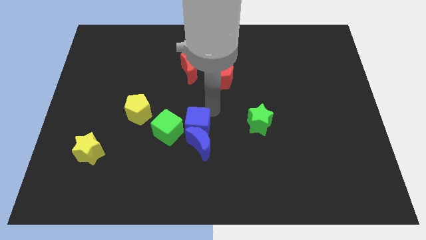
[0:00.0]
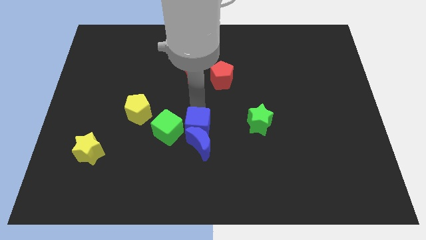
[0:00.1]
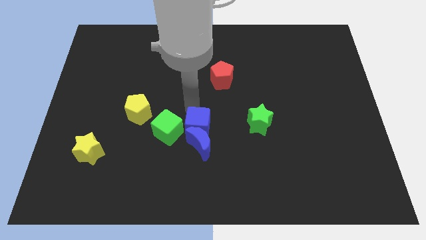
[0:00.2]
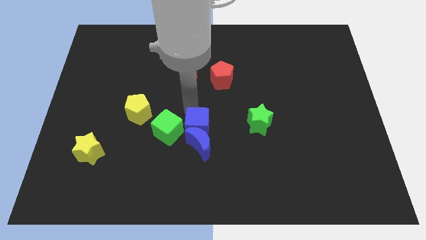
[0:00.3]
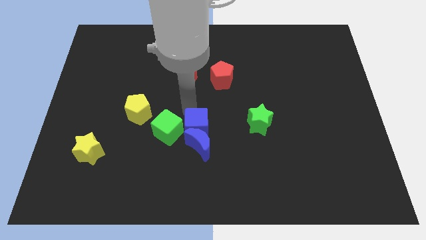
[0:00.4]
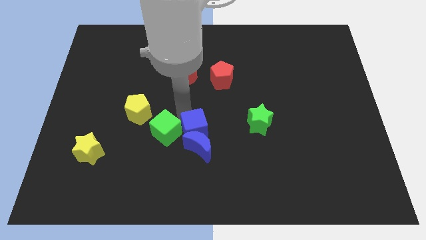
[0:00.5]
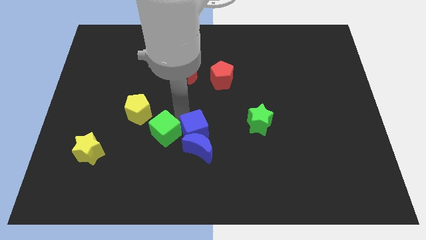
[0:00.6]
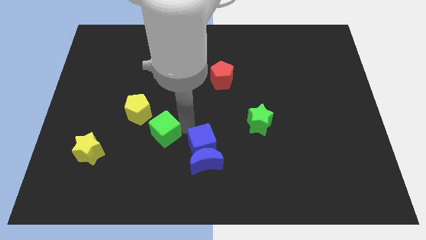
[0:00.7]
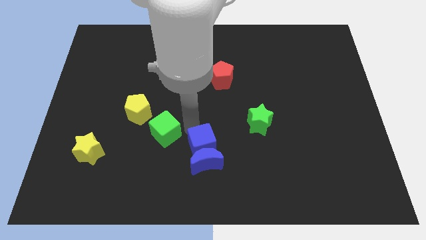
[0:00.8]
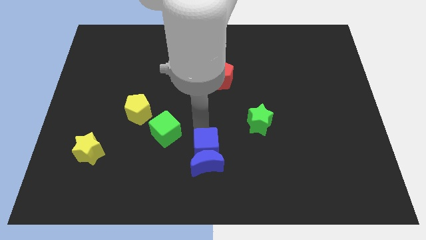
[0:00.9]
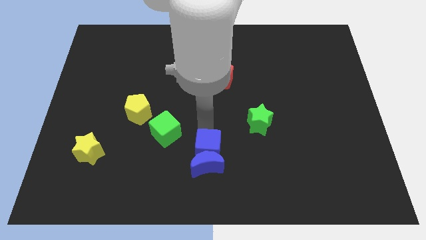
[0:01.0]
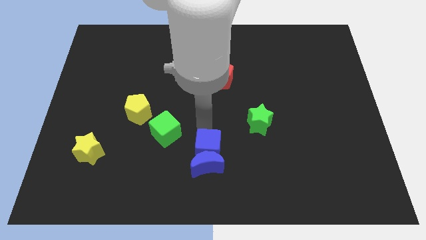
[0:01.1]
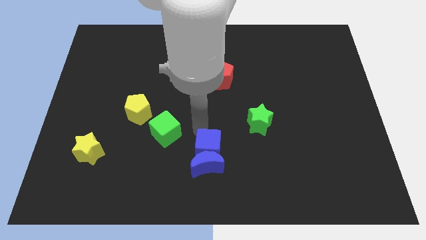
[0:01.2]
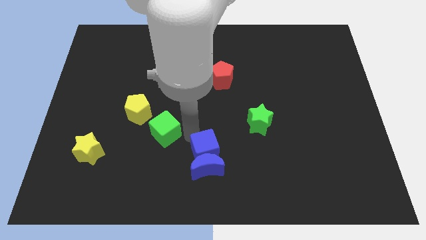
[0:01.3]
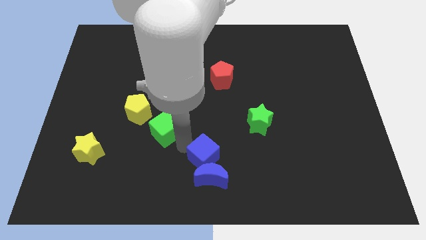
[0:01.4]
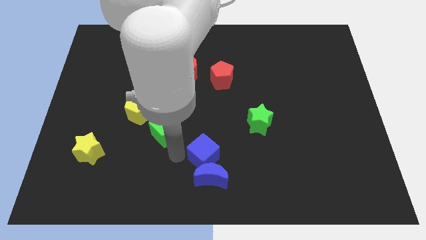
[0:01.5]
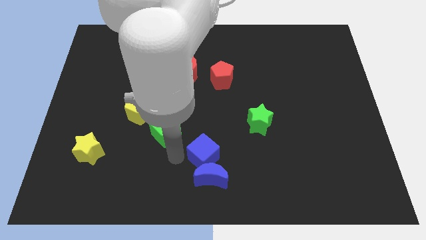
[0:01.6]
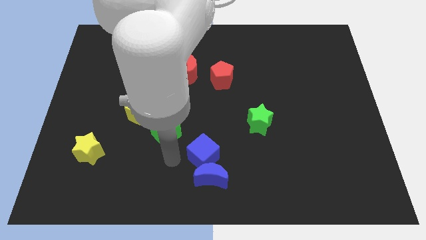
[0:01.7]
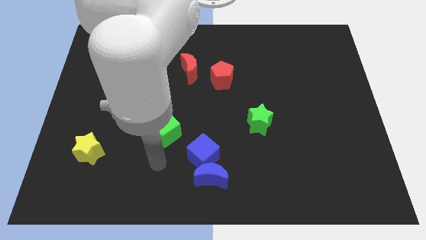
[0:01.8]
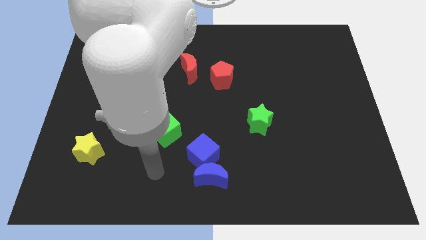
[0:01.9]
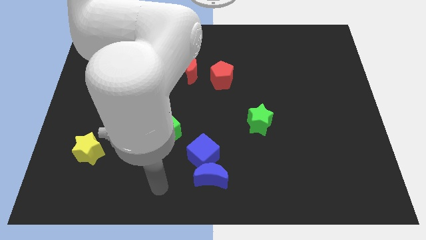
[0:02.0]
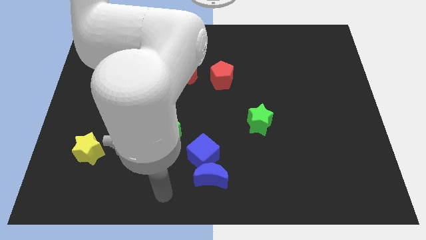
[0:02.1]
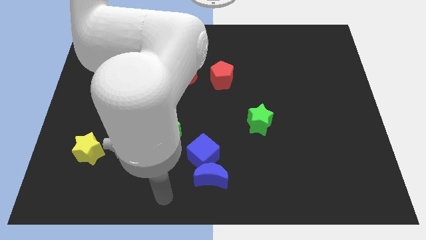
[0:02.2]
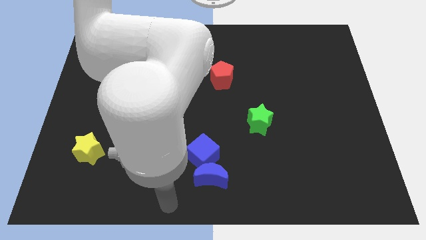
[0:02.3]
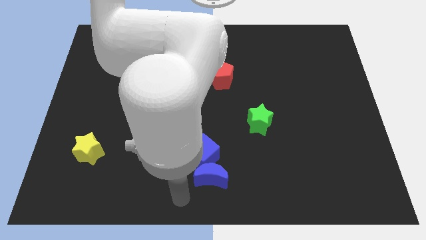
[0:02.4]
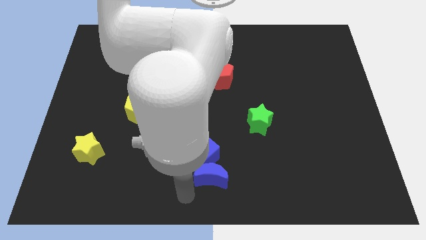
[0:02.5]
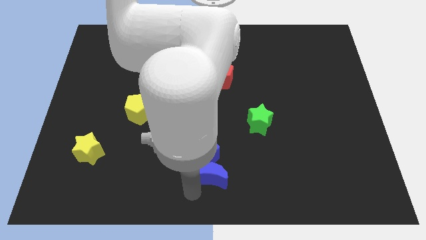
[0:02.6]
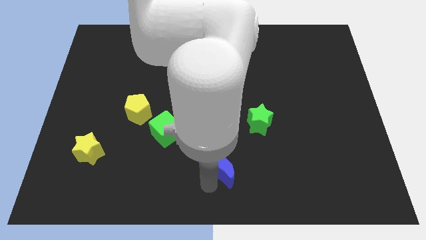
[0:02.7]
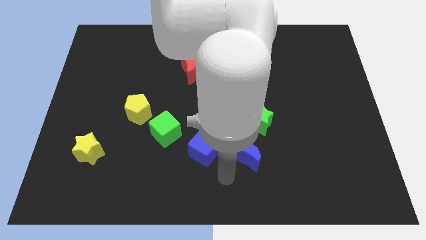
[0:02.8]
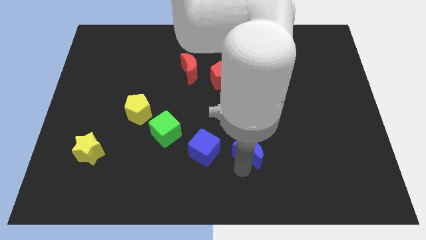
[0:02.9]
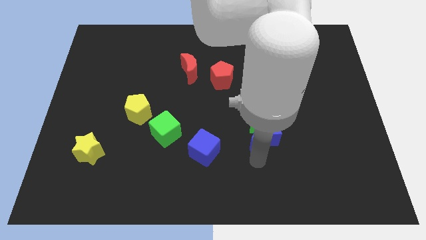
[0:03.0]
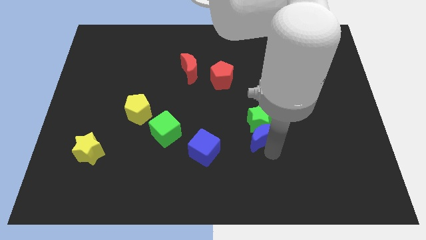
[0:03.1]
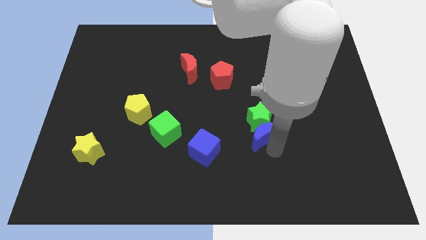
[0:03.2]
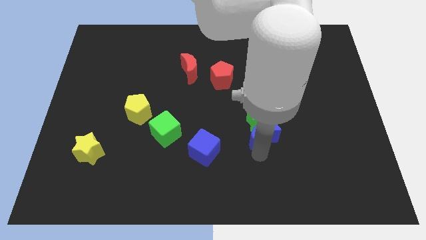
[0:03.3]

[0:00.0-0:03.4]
place blue moon below green star

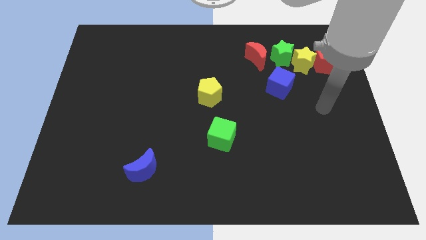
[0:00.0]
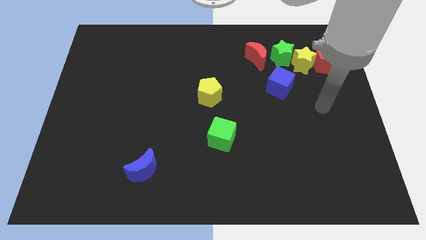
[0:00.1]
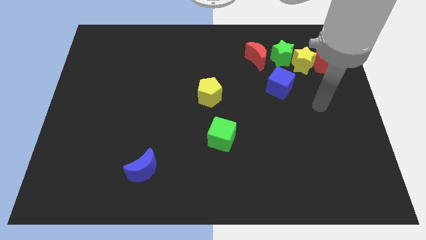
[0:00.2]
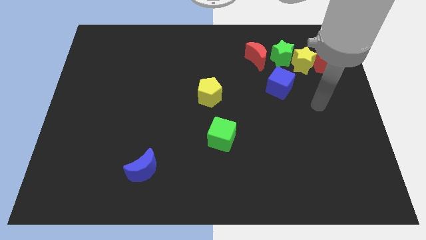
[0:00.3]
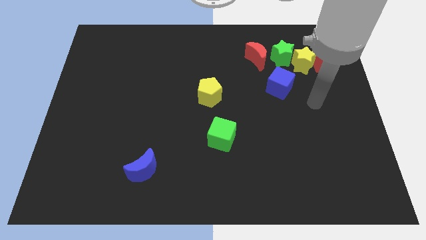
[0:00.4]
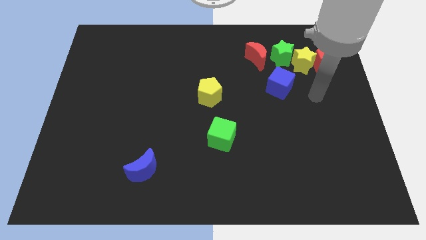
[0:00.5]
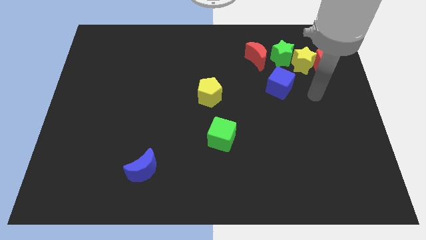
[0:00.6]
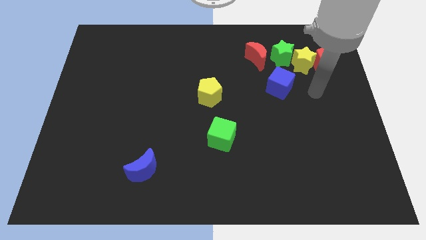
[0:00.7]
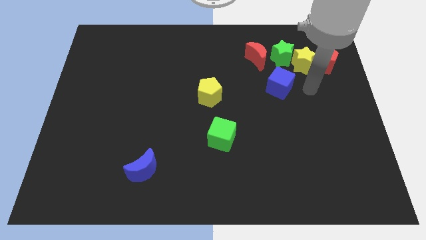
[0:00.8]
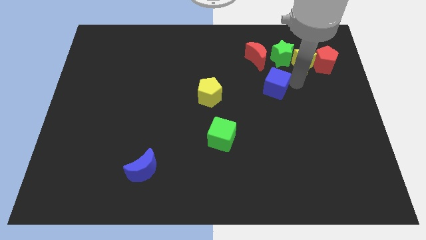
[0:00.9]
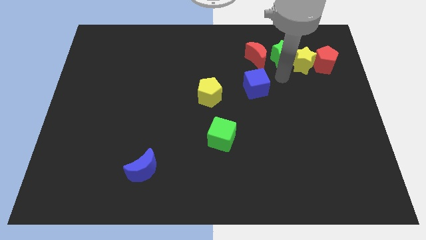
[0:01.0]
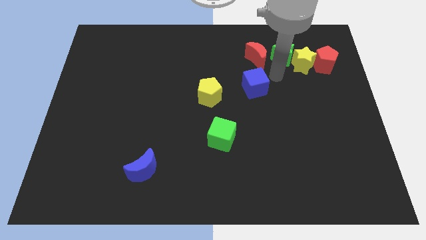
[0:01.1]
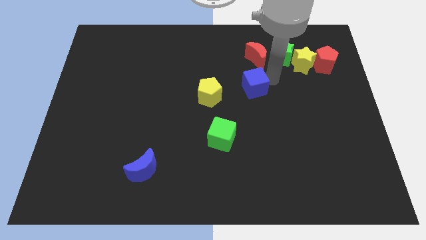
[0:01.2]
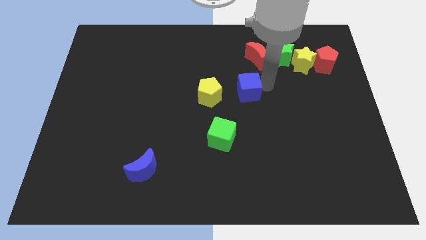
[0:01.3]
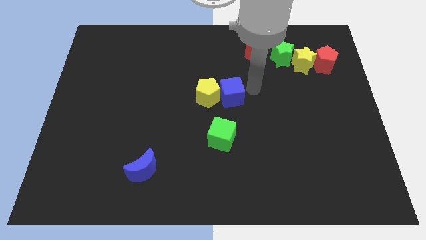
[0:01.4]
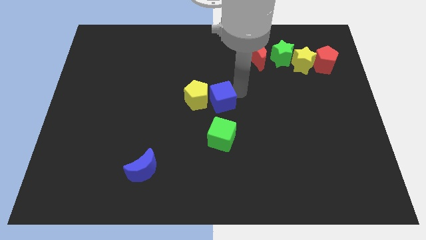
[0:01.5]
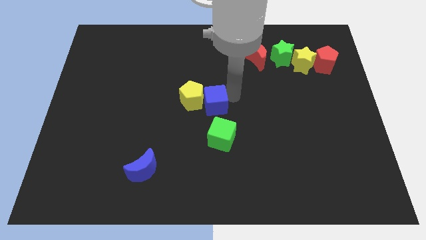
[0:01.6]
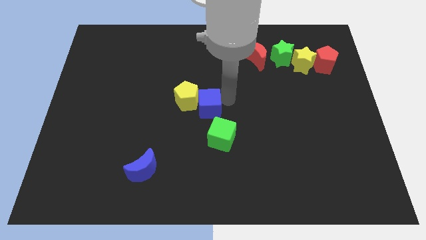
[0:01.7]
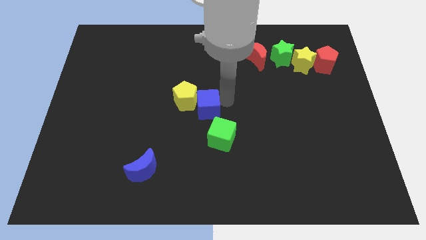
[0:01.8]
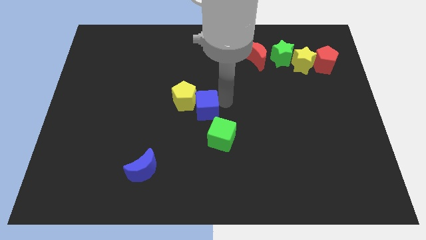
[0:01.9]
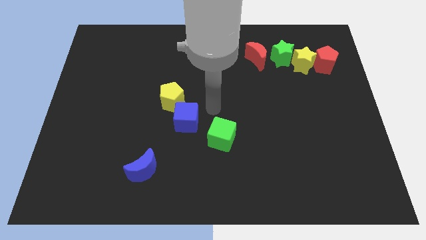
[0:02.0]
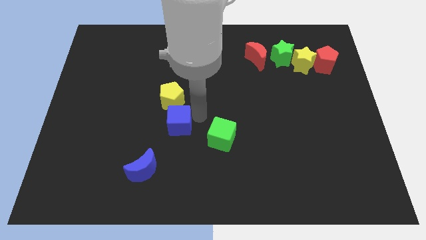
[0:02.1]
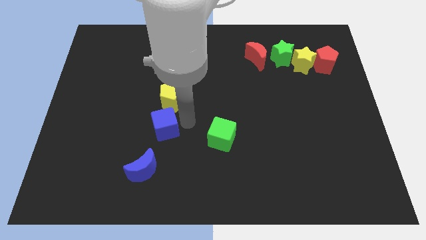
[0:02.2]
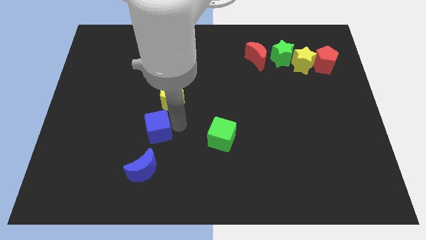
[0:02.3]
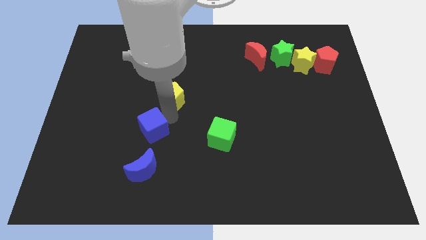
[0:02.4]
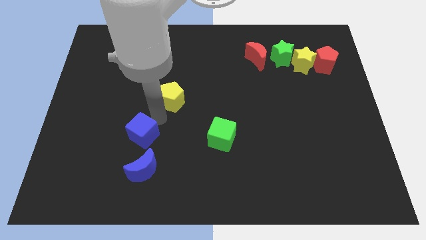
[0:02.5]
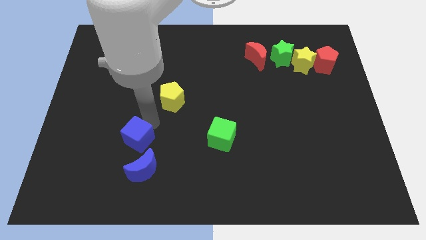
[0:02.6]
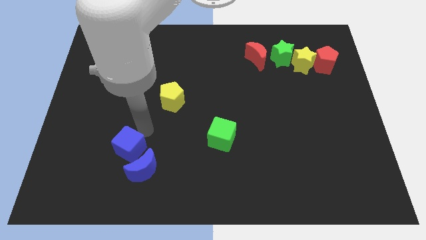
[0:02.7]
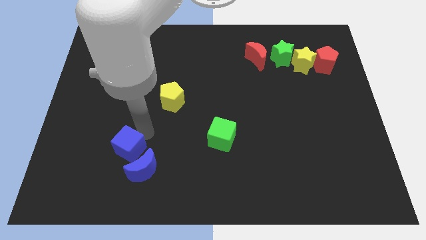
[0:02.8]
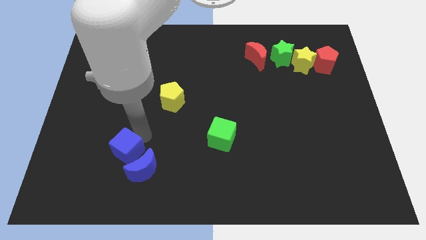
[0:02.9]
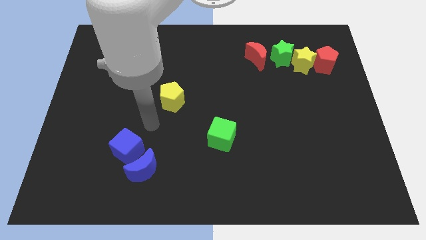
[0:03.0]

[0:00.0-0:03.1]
place the blue cube to the top of the blue crescent

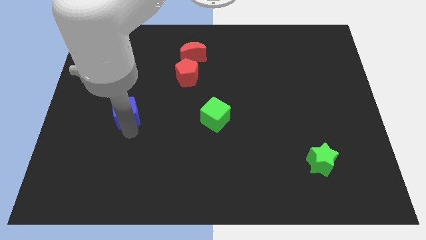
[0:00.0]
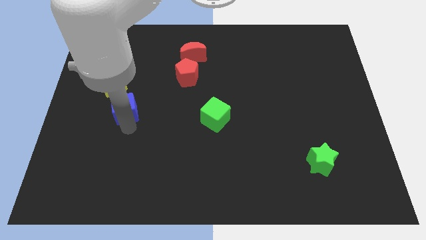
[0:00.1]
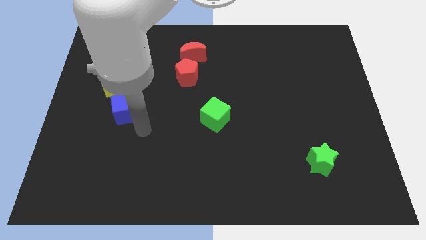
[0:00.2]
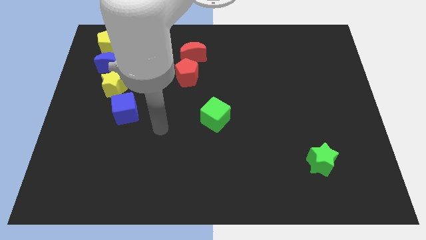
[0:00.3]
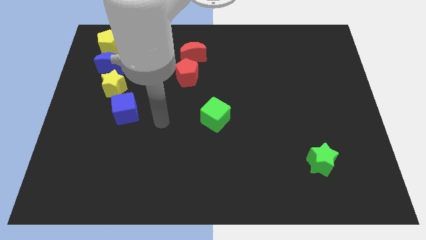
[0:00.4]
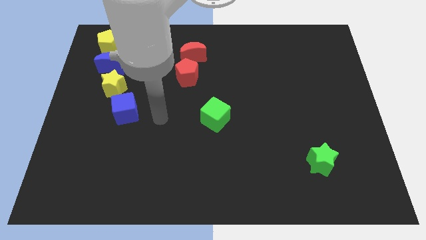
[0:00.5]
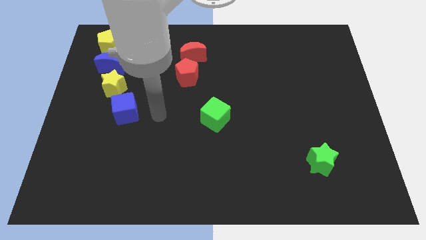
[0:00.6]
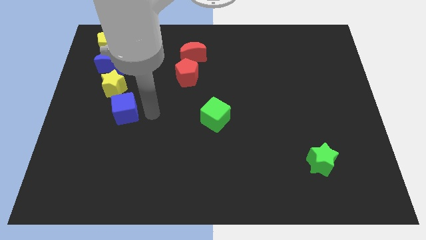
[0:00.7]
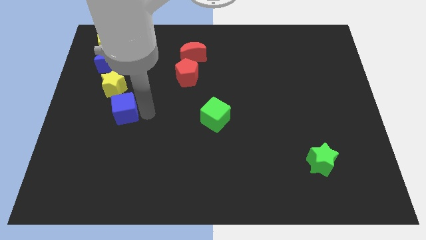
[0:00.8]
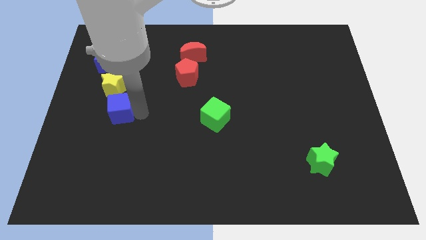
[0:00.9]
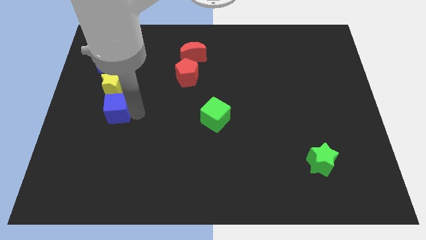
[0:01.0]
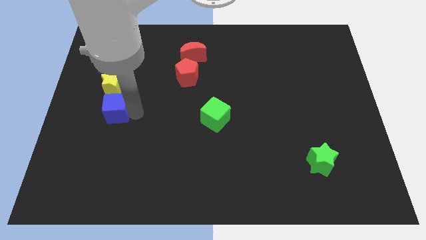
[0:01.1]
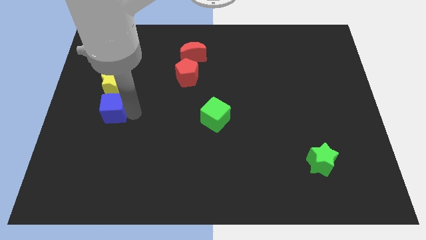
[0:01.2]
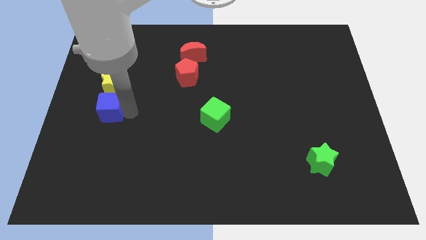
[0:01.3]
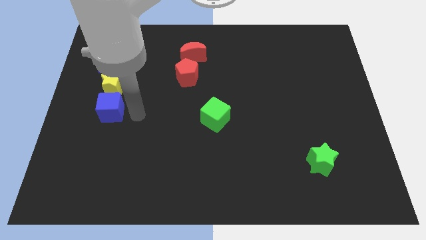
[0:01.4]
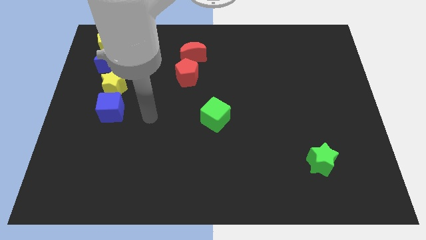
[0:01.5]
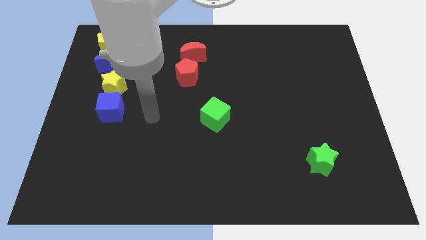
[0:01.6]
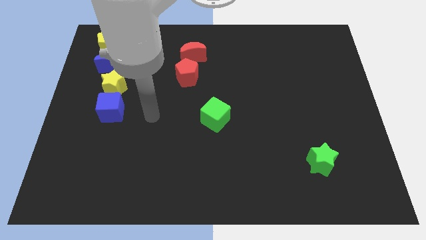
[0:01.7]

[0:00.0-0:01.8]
place the blue cube to the bottom side of the yellow star

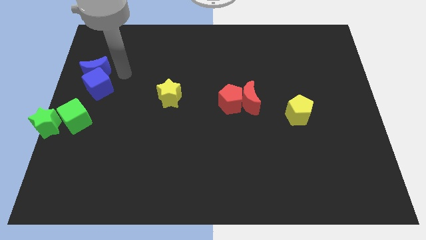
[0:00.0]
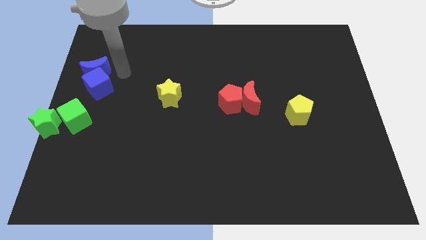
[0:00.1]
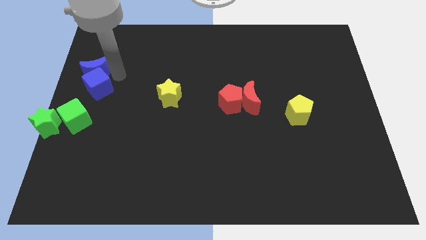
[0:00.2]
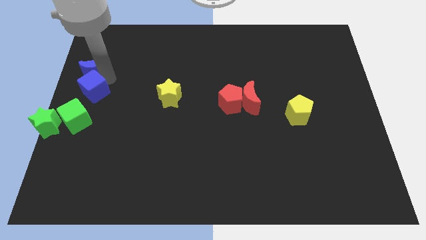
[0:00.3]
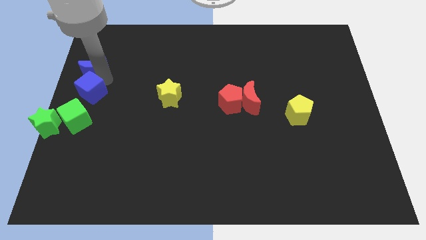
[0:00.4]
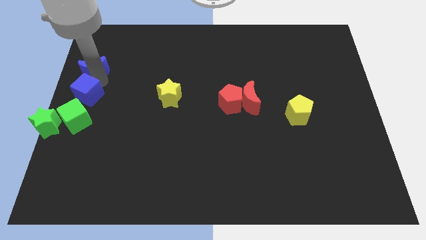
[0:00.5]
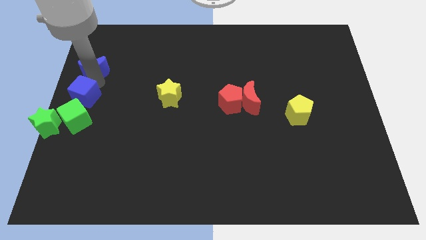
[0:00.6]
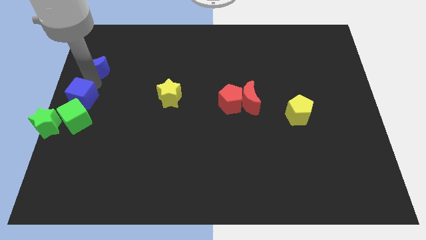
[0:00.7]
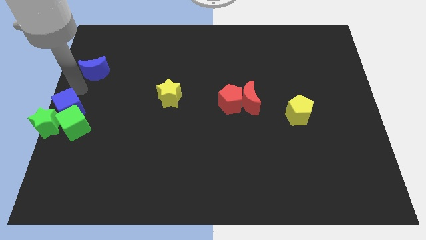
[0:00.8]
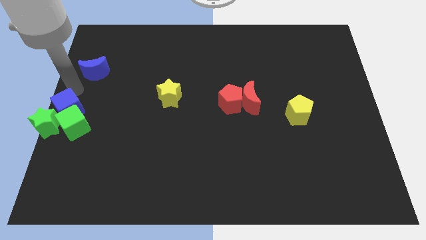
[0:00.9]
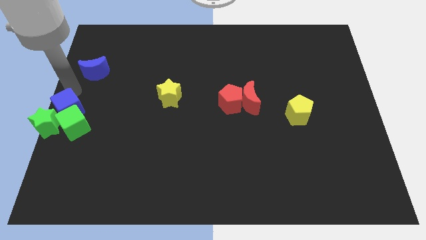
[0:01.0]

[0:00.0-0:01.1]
separate blue cube from blue moon
